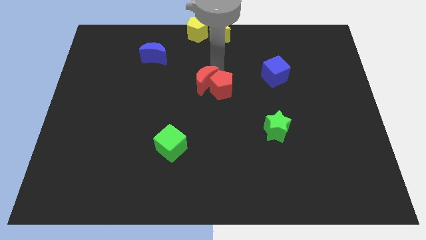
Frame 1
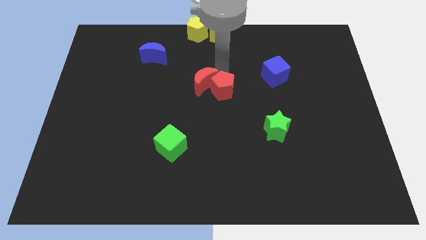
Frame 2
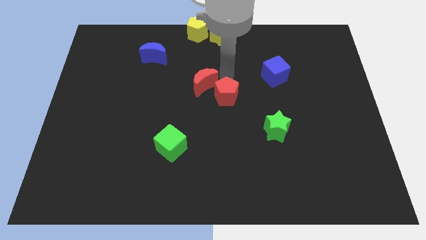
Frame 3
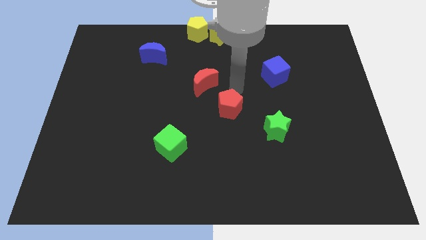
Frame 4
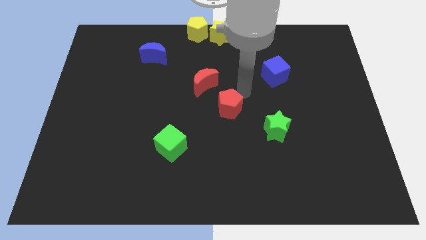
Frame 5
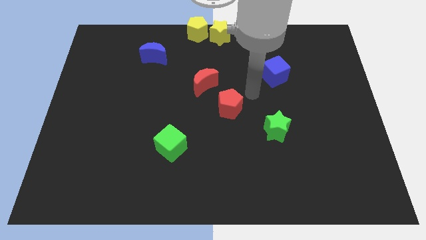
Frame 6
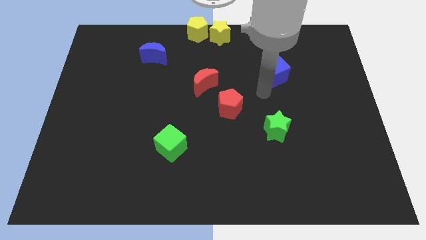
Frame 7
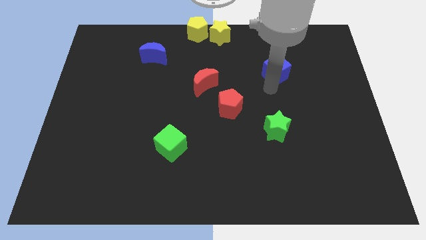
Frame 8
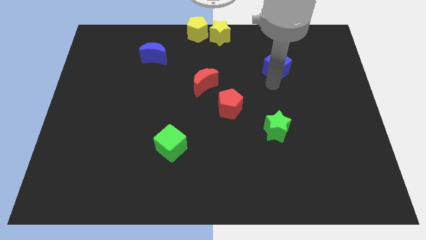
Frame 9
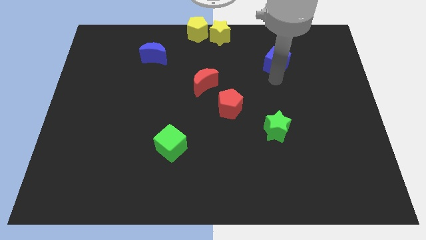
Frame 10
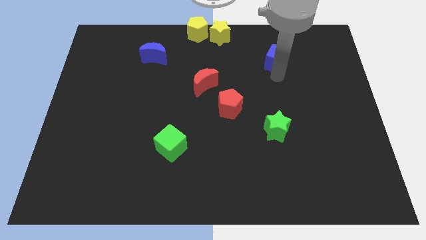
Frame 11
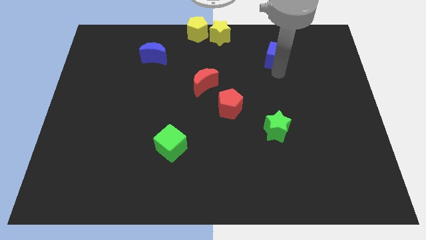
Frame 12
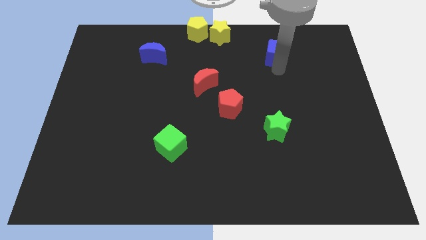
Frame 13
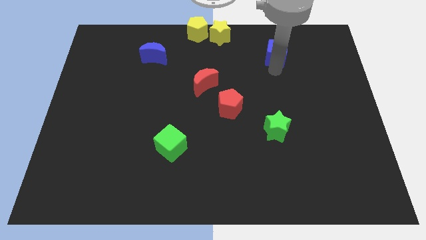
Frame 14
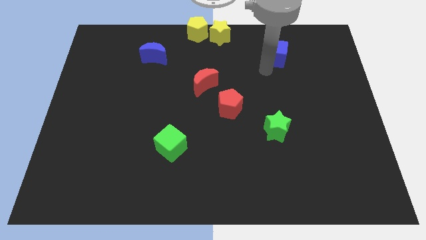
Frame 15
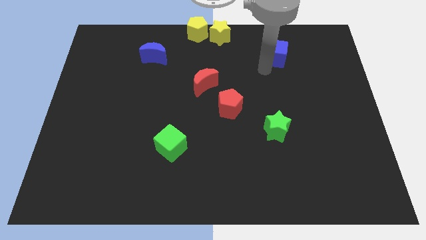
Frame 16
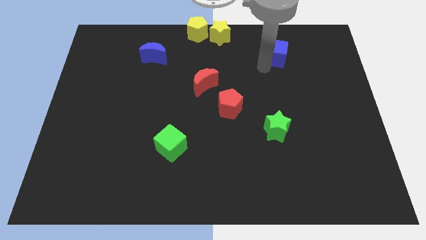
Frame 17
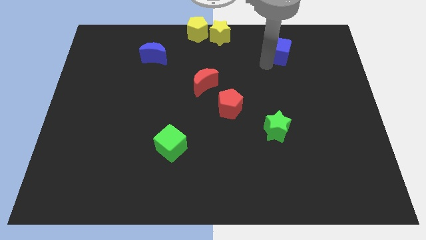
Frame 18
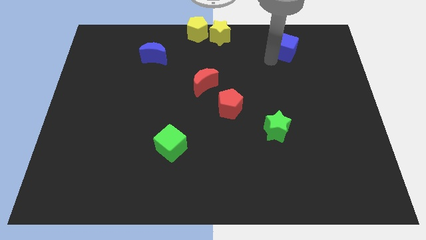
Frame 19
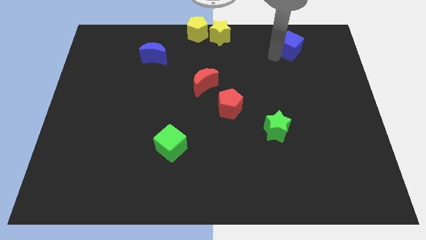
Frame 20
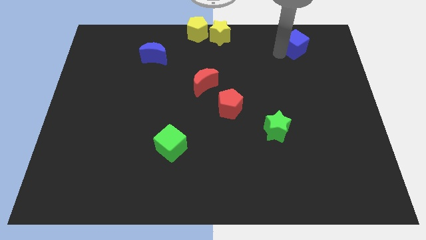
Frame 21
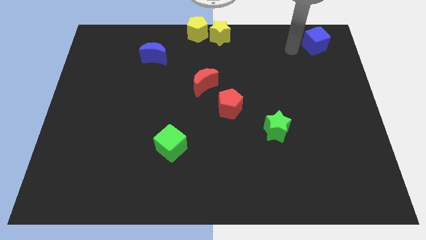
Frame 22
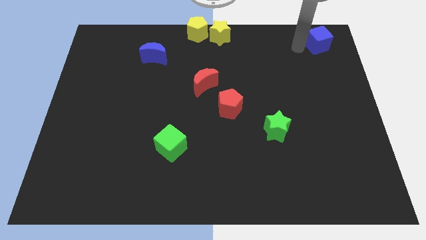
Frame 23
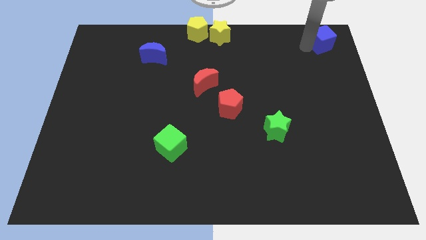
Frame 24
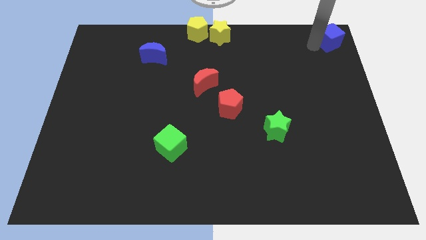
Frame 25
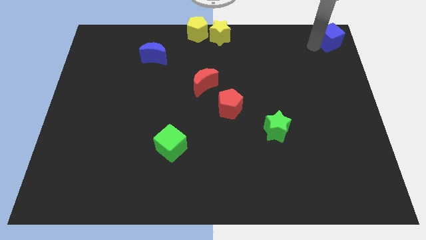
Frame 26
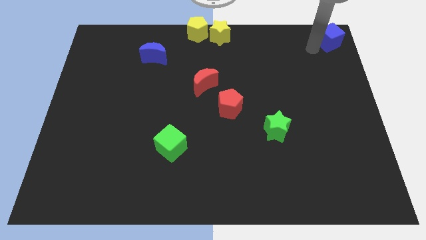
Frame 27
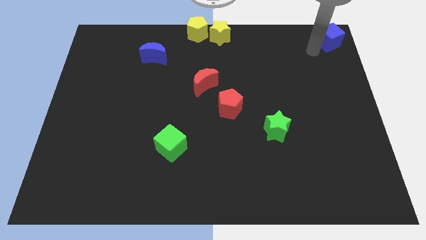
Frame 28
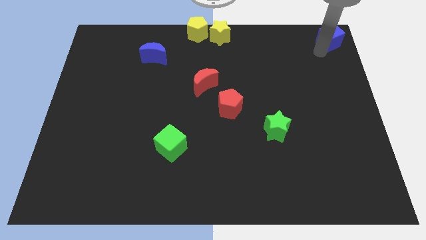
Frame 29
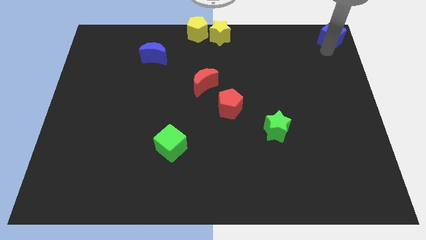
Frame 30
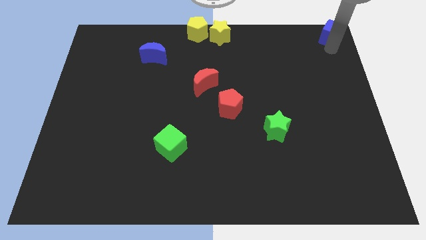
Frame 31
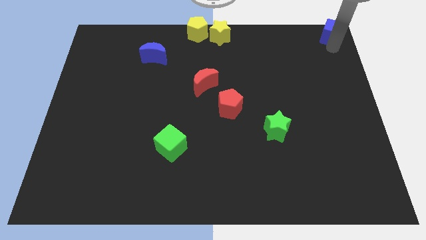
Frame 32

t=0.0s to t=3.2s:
push blue cube to the right top corner

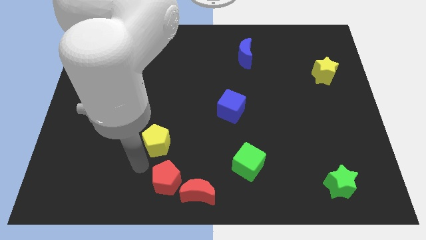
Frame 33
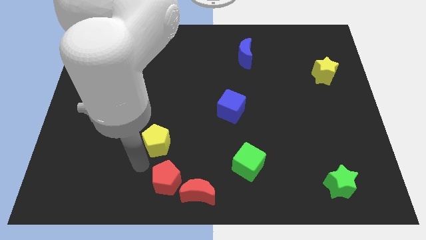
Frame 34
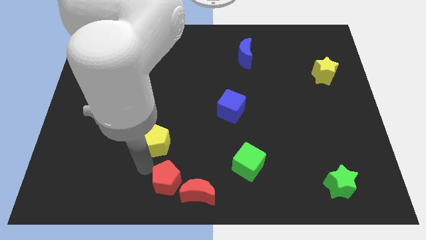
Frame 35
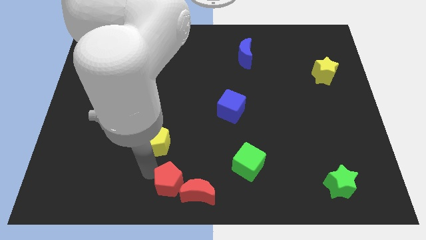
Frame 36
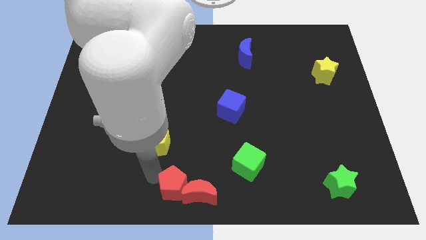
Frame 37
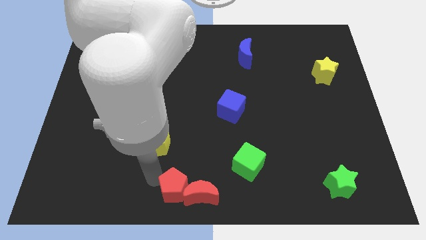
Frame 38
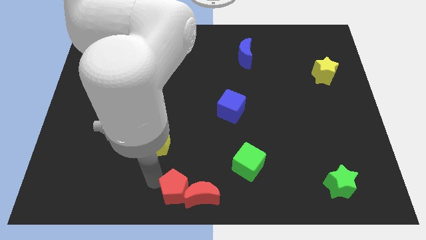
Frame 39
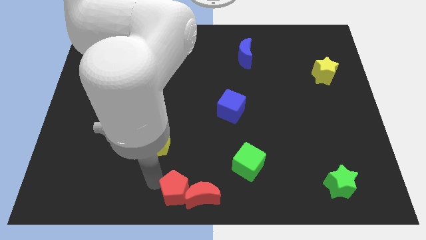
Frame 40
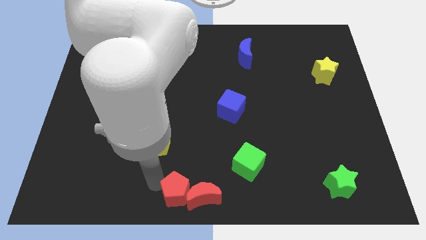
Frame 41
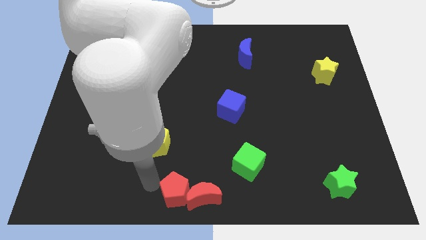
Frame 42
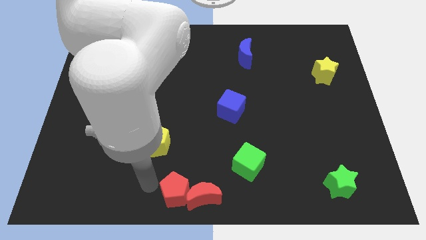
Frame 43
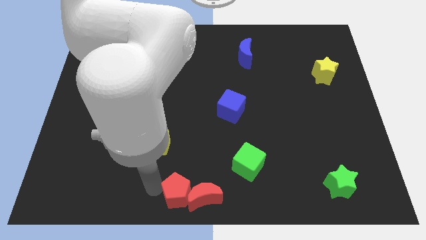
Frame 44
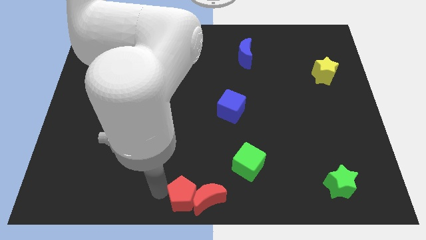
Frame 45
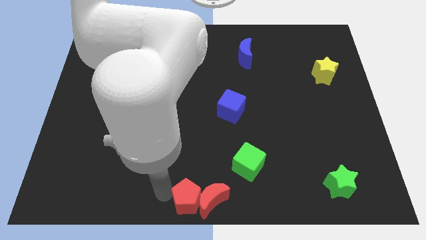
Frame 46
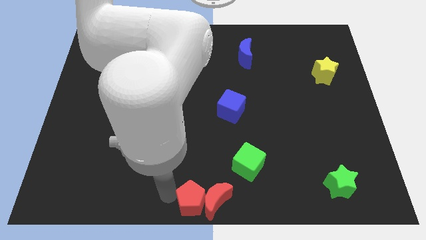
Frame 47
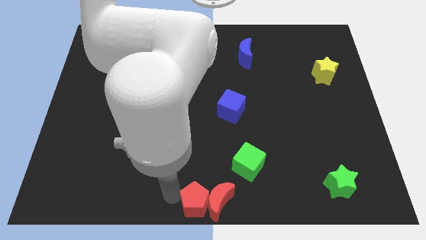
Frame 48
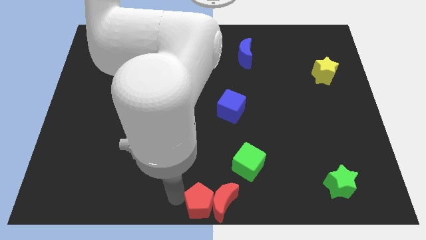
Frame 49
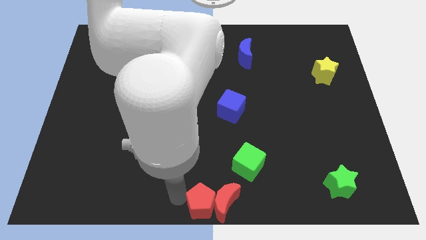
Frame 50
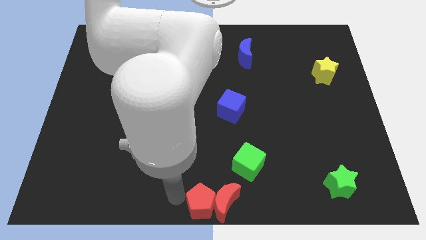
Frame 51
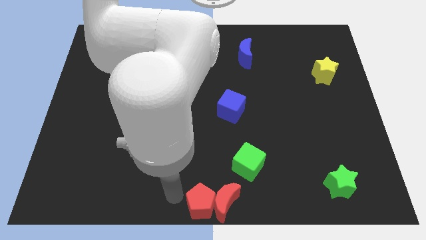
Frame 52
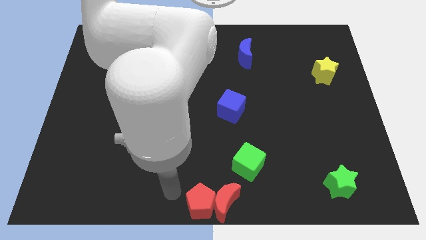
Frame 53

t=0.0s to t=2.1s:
place the red blocks at the bottom center of the board

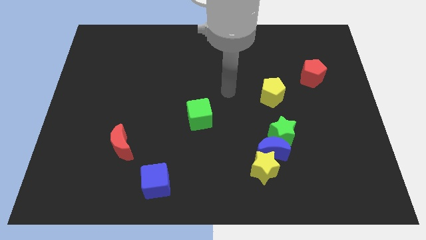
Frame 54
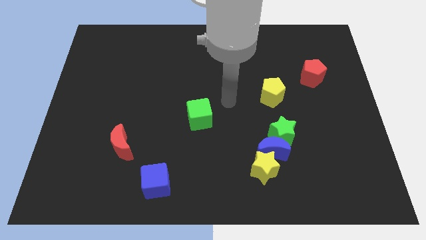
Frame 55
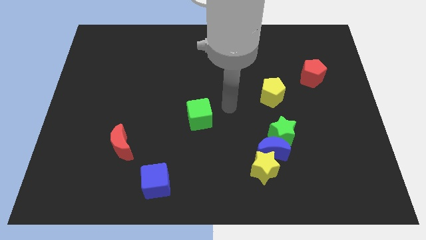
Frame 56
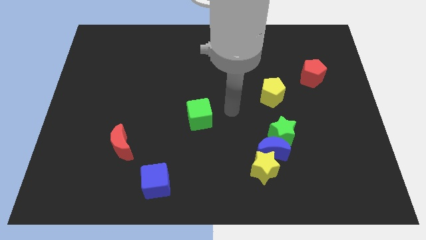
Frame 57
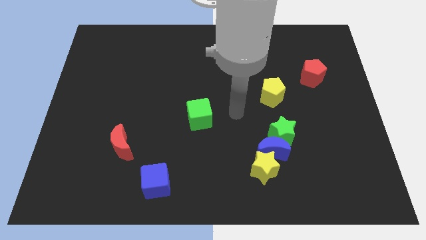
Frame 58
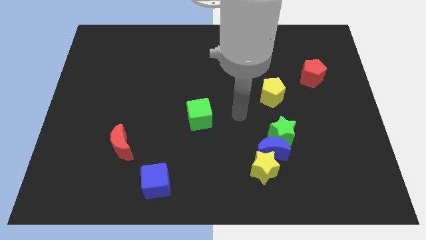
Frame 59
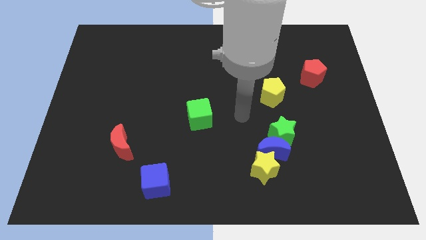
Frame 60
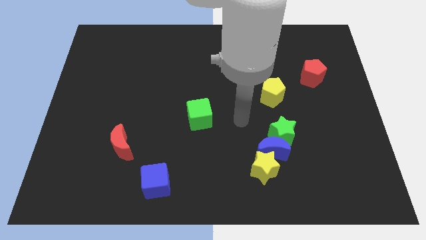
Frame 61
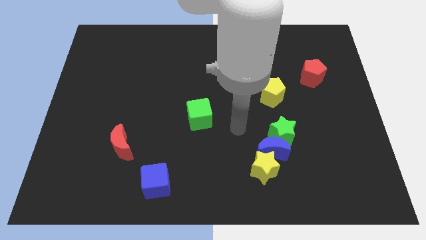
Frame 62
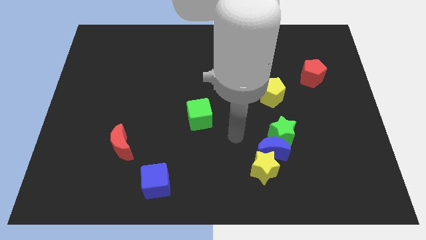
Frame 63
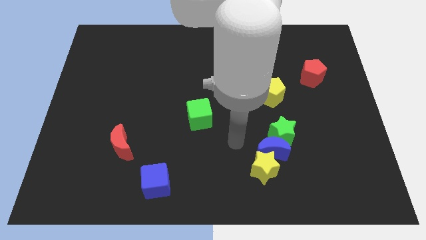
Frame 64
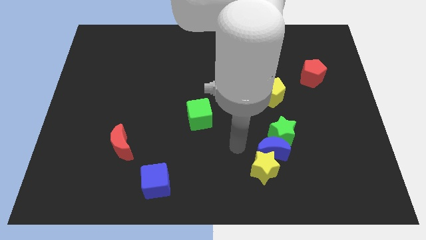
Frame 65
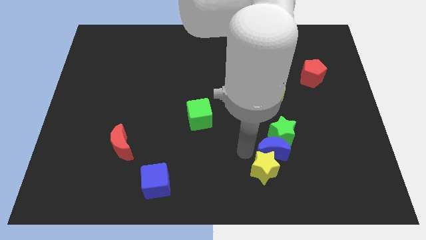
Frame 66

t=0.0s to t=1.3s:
move your arm to the bottom center

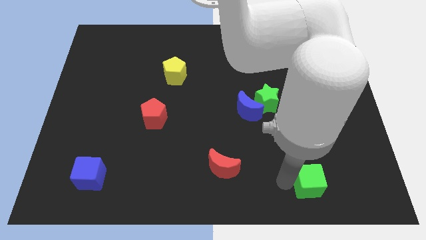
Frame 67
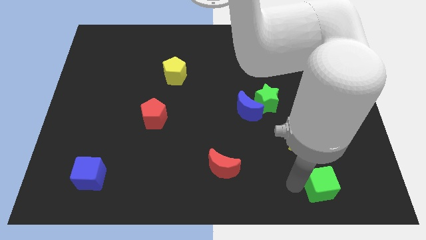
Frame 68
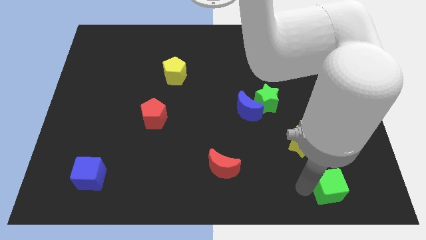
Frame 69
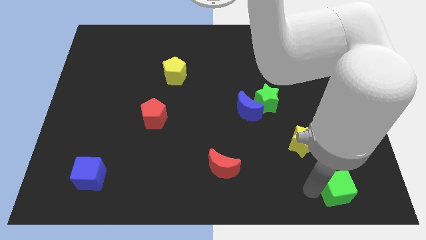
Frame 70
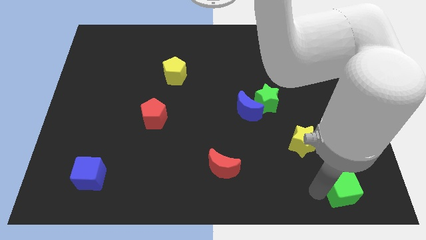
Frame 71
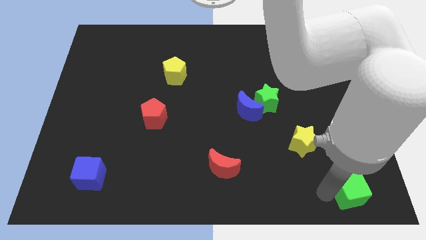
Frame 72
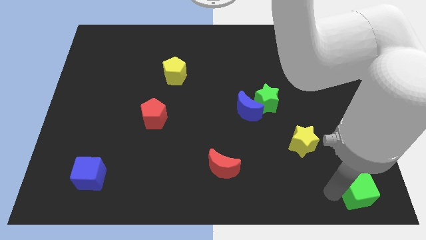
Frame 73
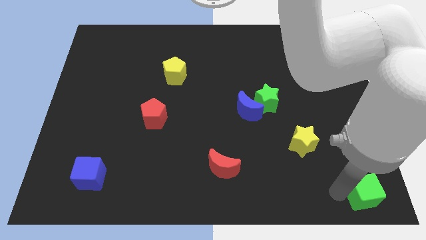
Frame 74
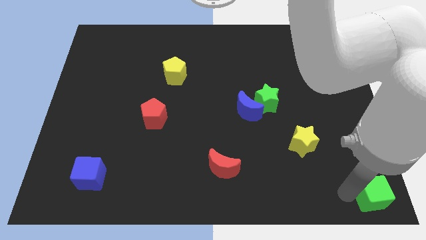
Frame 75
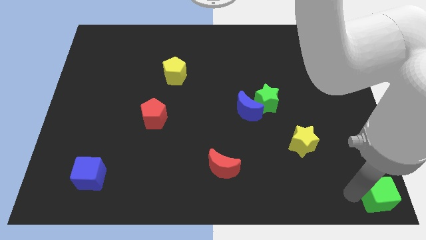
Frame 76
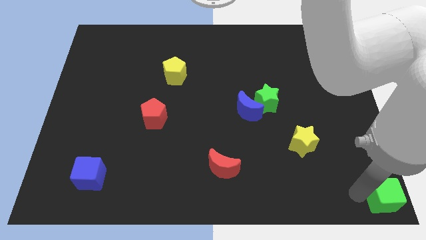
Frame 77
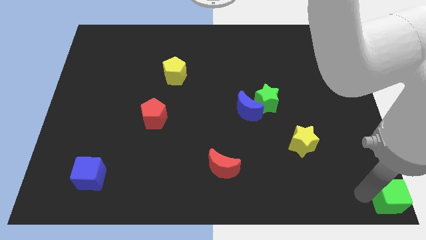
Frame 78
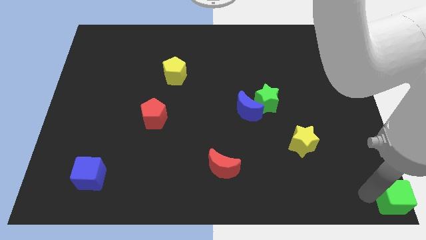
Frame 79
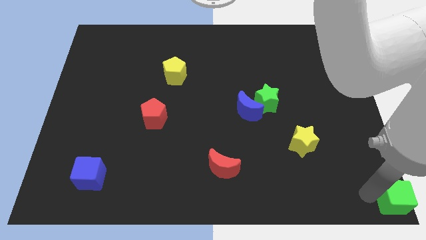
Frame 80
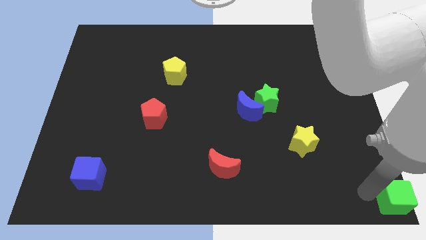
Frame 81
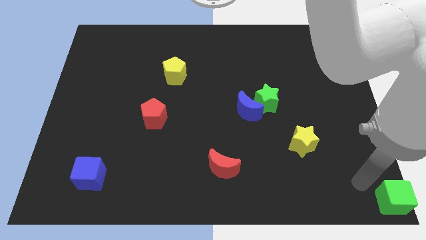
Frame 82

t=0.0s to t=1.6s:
place the green cube at the bottom right corner of the board

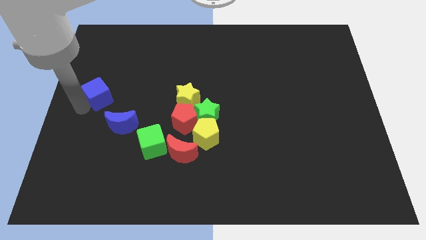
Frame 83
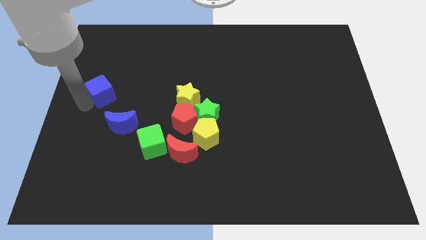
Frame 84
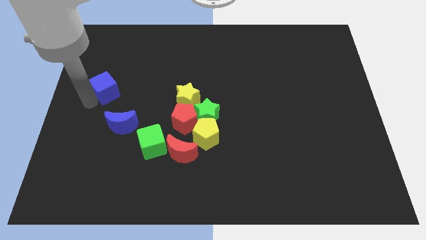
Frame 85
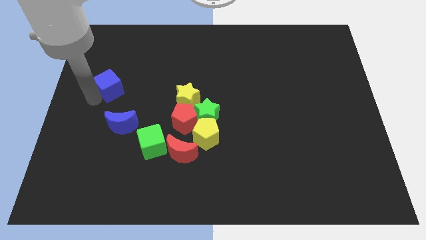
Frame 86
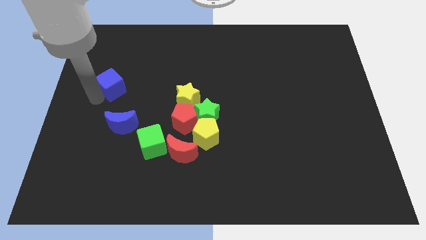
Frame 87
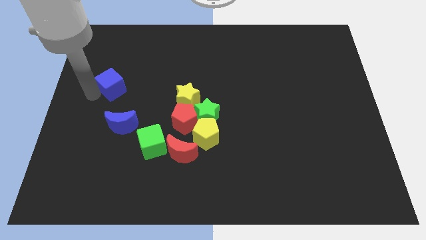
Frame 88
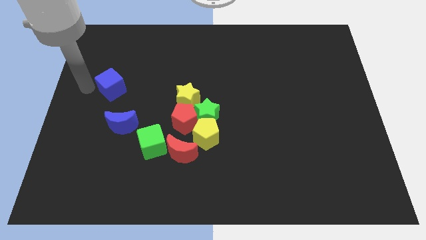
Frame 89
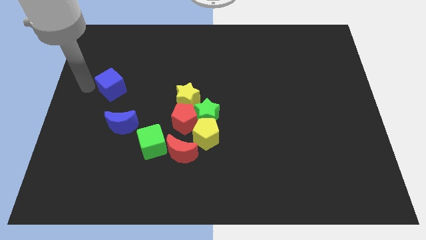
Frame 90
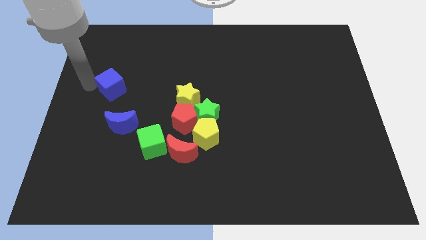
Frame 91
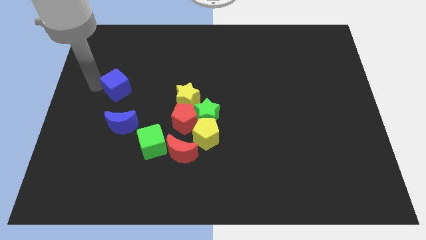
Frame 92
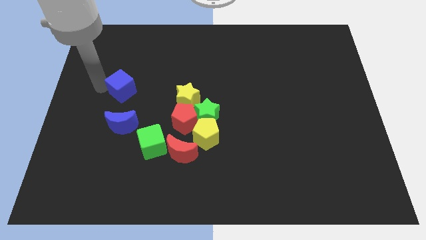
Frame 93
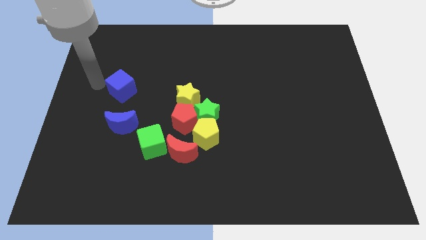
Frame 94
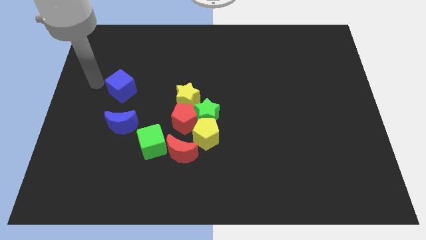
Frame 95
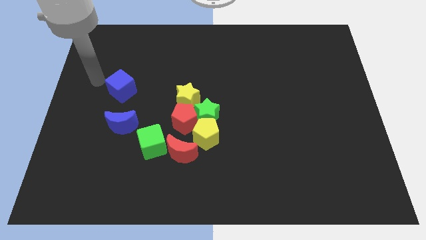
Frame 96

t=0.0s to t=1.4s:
push the blue cube to the top of the blue crescent
